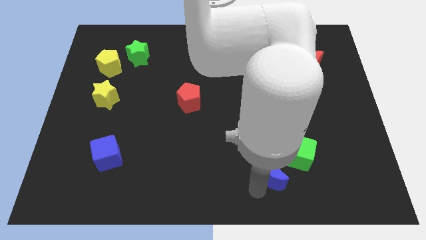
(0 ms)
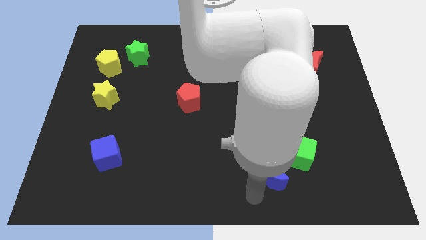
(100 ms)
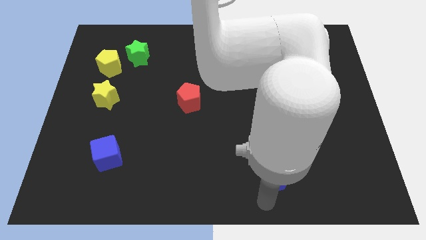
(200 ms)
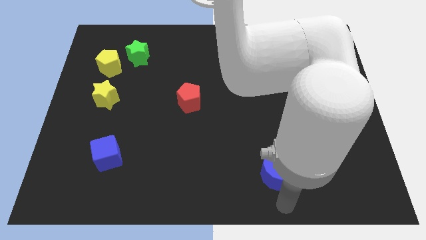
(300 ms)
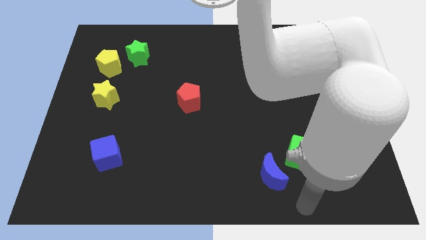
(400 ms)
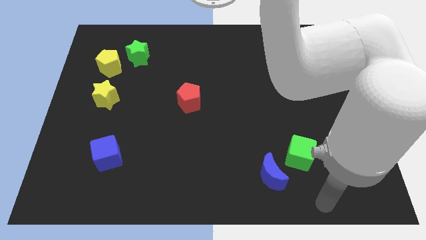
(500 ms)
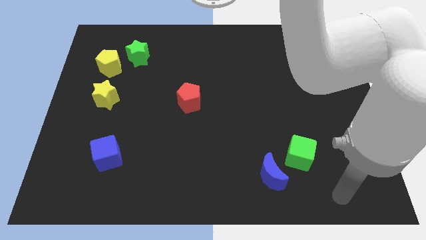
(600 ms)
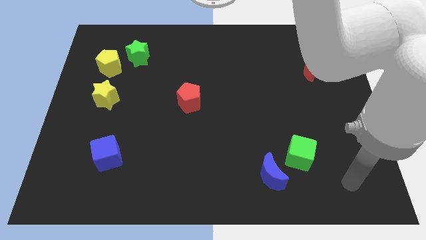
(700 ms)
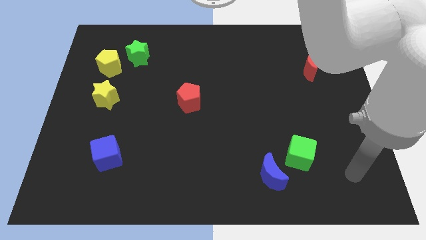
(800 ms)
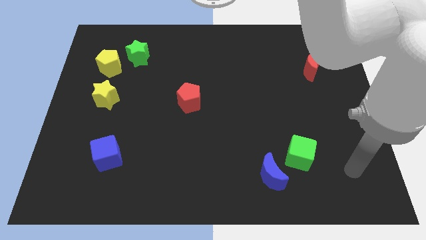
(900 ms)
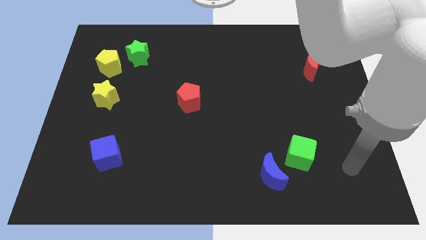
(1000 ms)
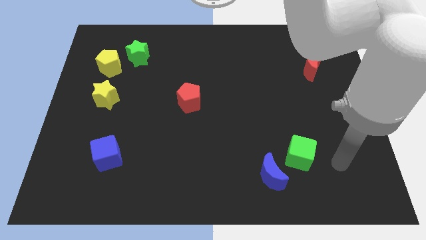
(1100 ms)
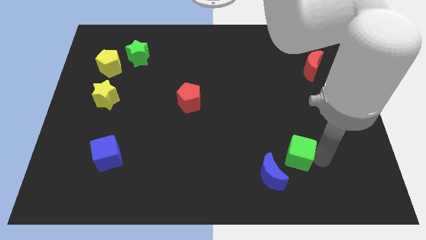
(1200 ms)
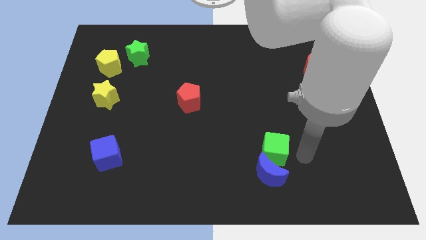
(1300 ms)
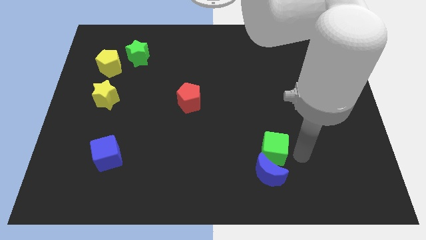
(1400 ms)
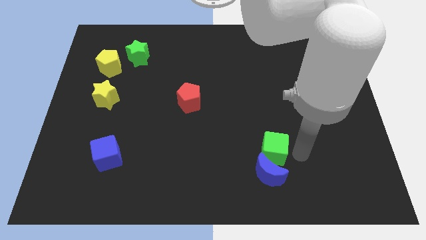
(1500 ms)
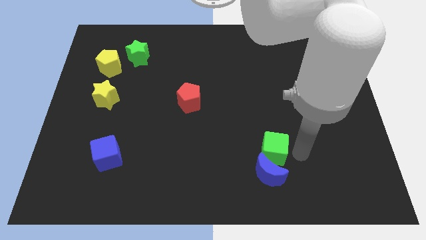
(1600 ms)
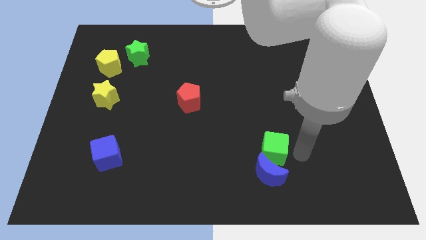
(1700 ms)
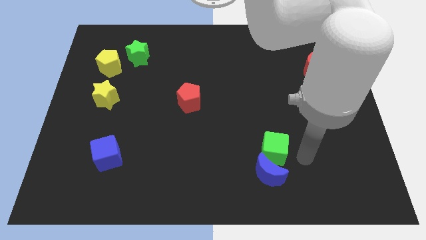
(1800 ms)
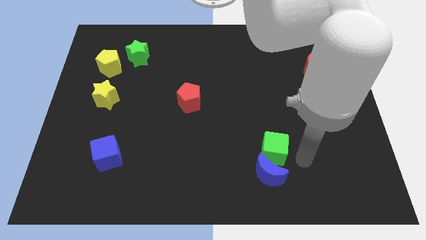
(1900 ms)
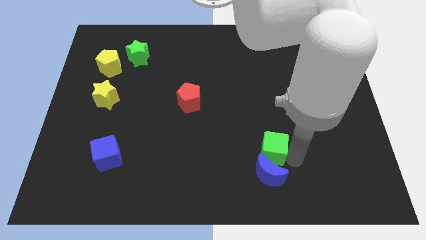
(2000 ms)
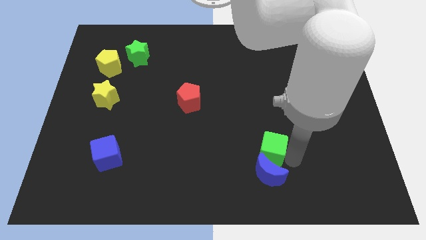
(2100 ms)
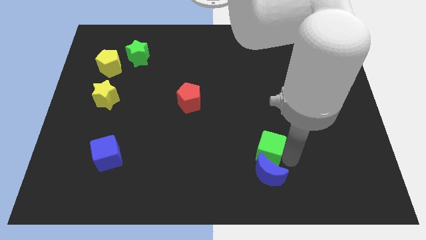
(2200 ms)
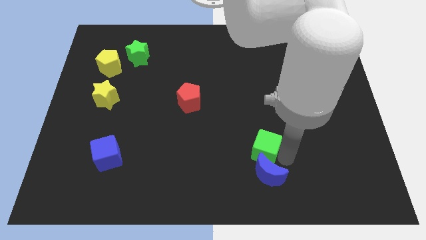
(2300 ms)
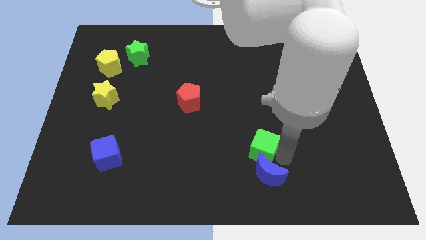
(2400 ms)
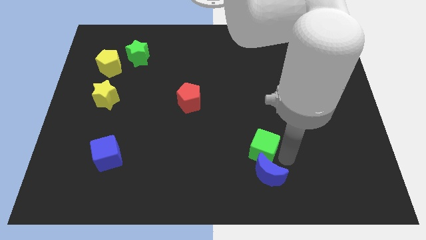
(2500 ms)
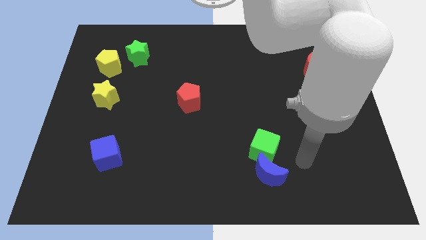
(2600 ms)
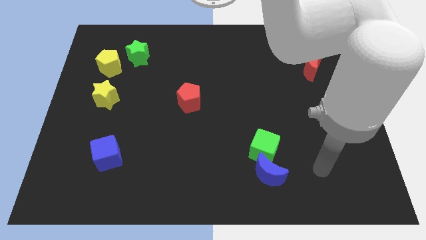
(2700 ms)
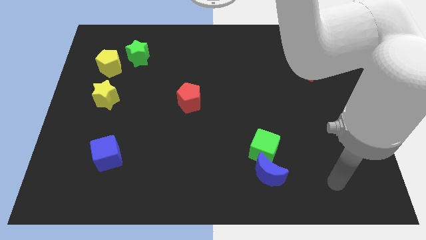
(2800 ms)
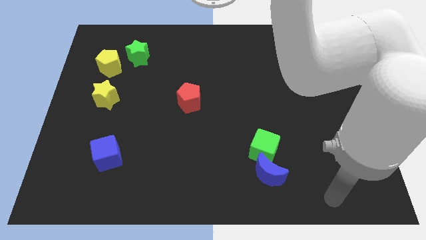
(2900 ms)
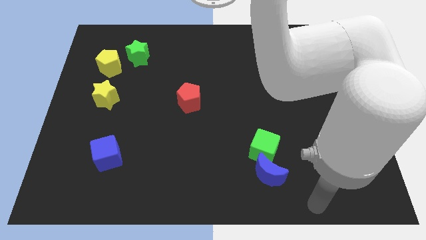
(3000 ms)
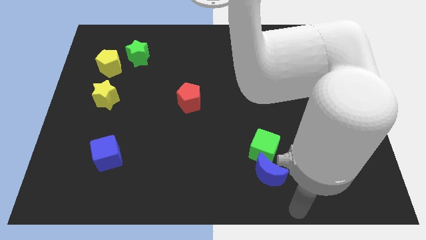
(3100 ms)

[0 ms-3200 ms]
put the green cube diagonally top left to the blue moon

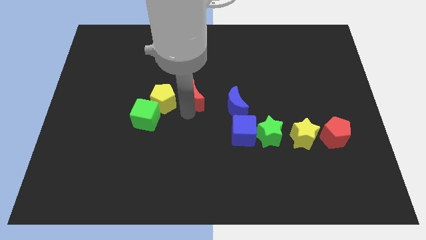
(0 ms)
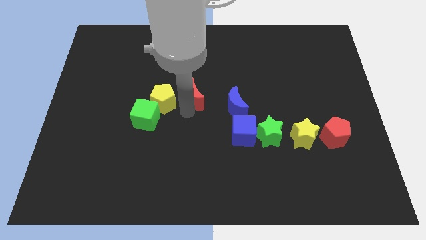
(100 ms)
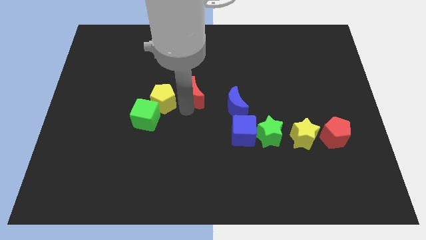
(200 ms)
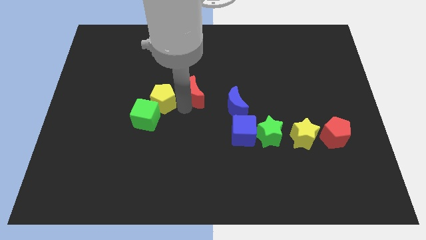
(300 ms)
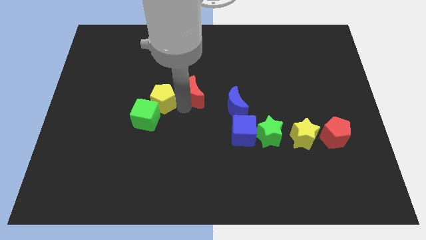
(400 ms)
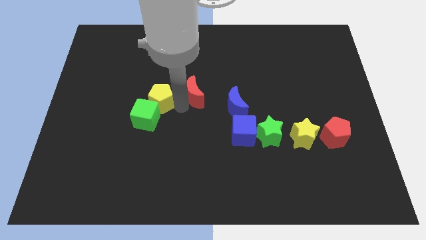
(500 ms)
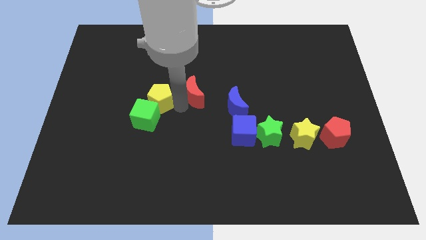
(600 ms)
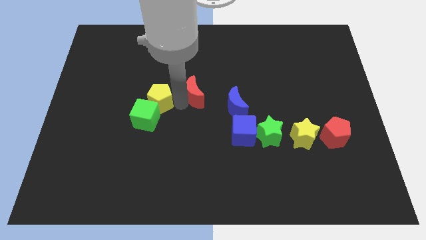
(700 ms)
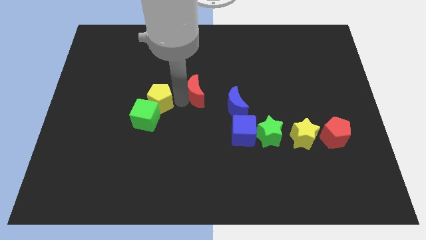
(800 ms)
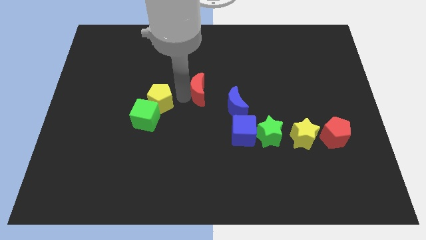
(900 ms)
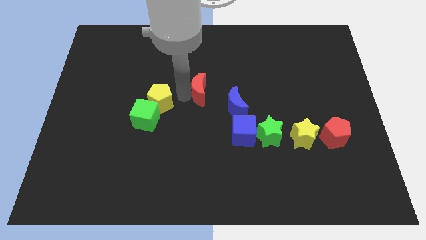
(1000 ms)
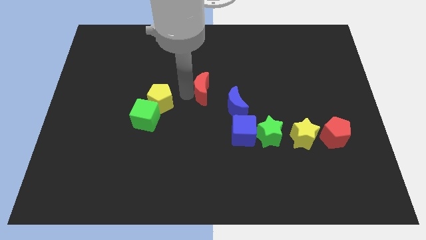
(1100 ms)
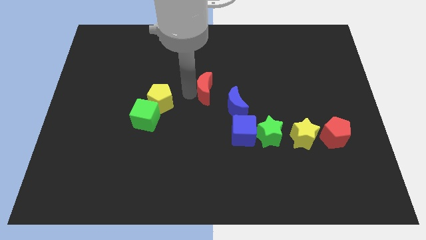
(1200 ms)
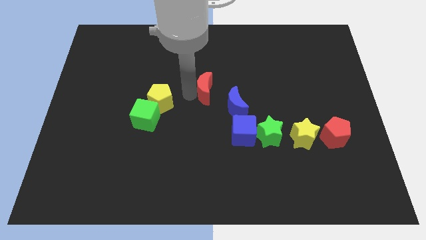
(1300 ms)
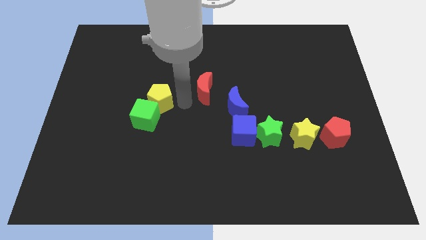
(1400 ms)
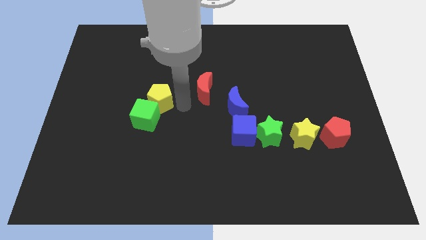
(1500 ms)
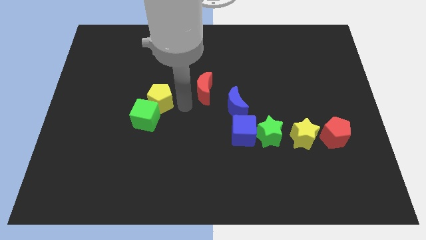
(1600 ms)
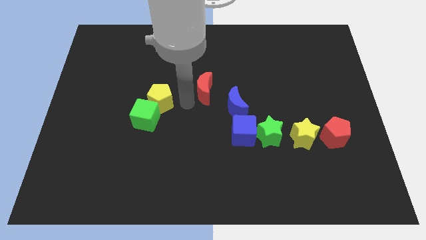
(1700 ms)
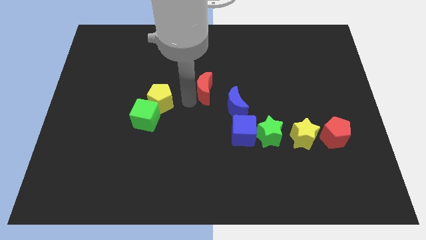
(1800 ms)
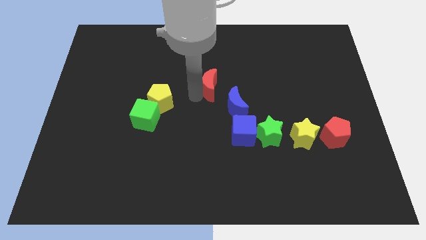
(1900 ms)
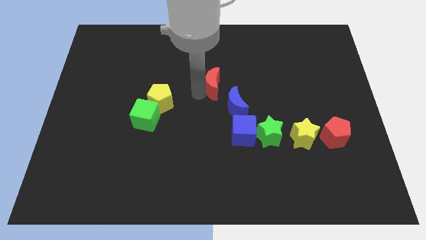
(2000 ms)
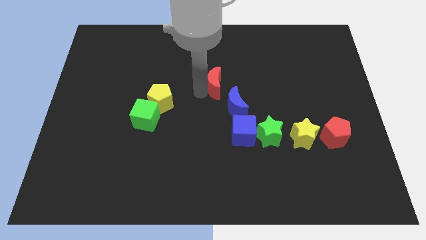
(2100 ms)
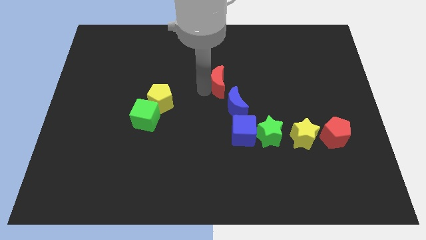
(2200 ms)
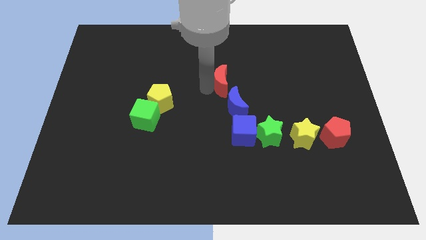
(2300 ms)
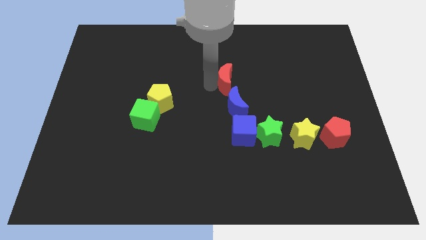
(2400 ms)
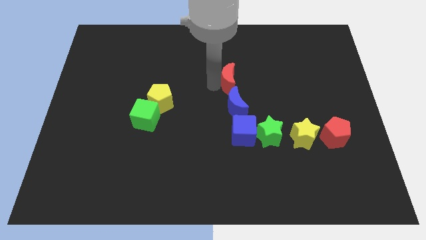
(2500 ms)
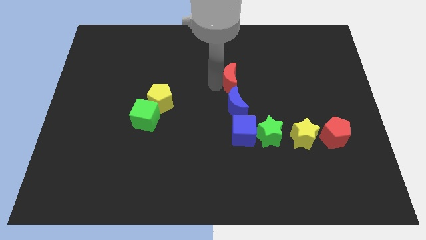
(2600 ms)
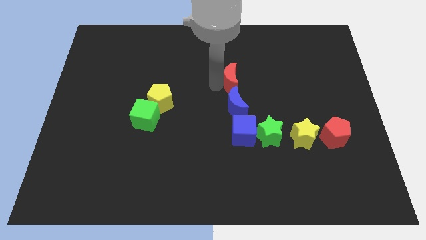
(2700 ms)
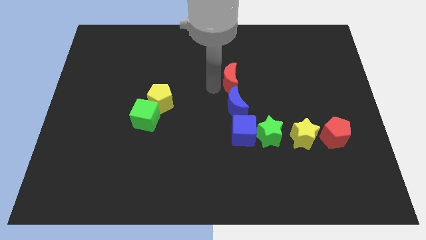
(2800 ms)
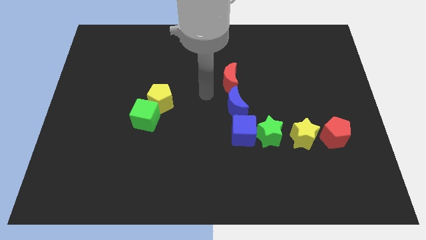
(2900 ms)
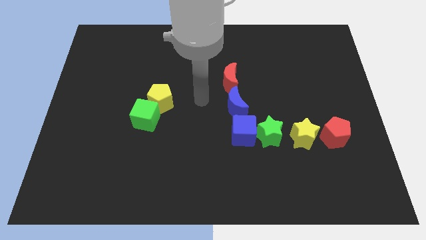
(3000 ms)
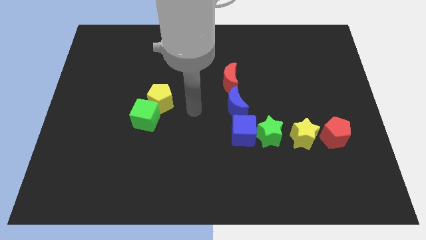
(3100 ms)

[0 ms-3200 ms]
place the red crescent to the top of the blue crescent

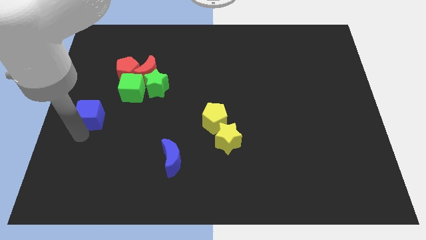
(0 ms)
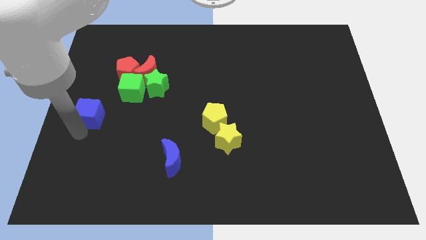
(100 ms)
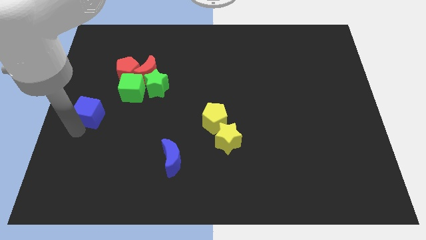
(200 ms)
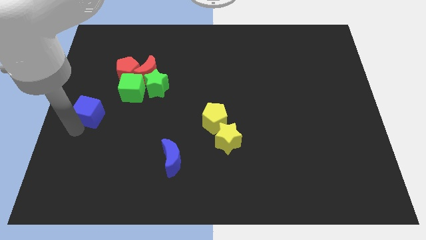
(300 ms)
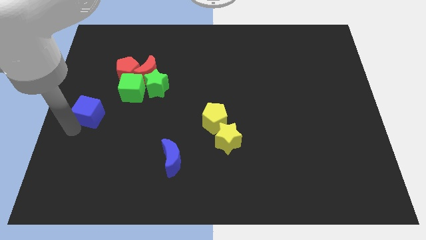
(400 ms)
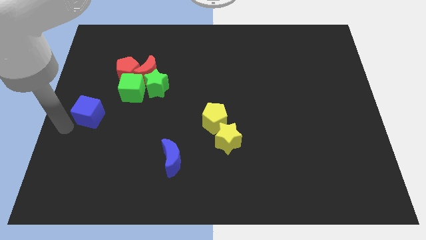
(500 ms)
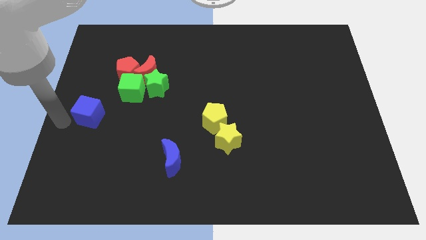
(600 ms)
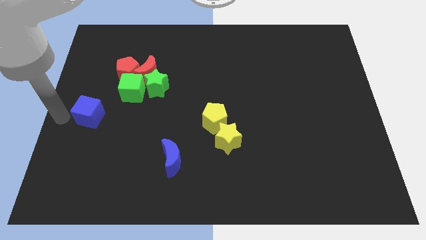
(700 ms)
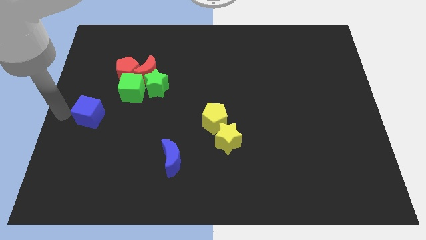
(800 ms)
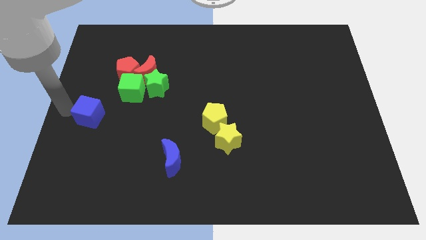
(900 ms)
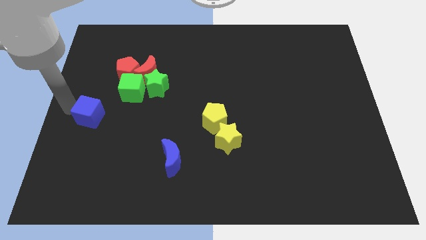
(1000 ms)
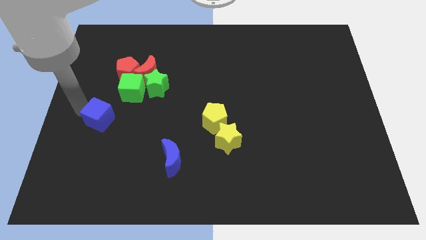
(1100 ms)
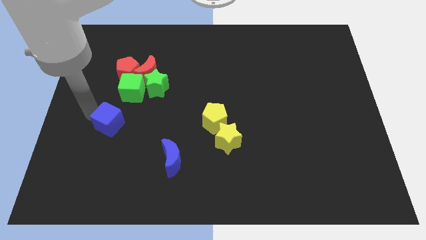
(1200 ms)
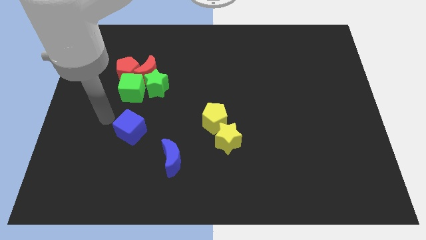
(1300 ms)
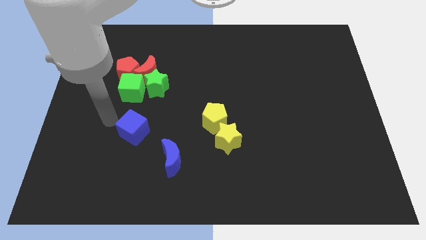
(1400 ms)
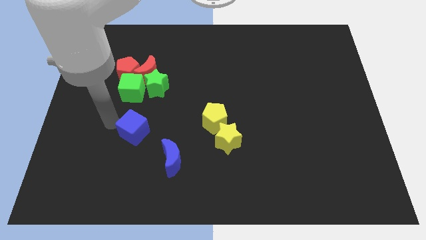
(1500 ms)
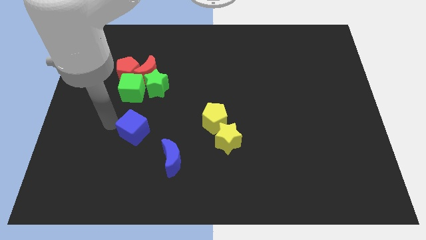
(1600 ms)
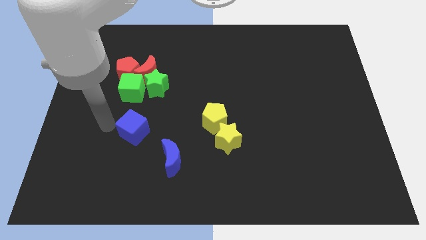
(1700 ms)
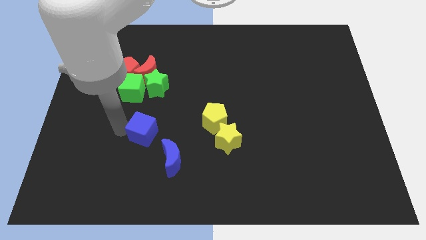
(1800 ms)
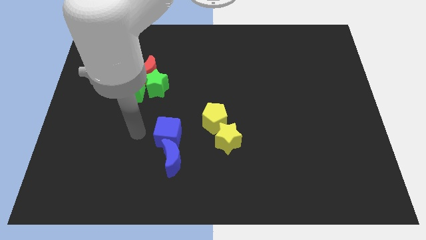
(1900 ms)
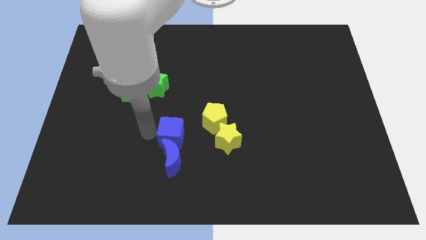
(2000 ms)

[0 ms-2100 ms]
put the blue cube above the blue moon

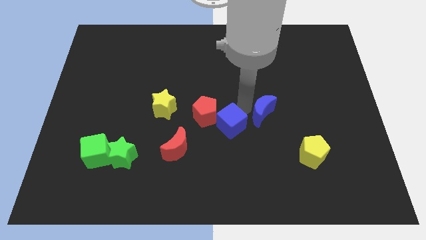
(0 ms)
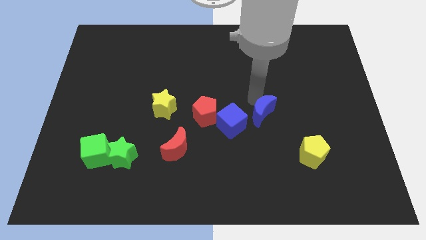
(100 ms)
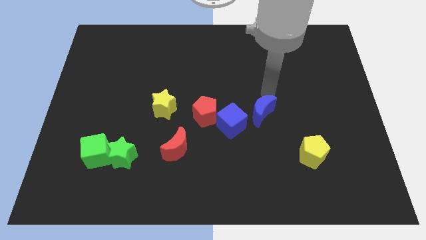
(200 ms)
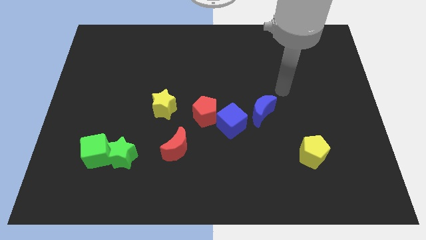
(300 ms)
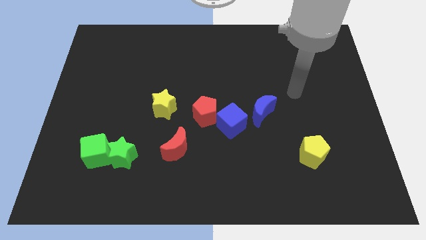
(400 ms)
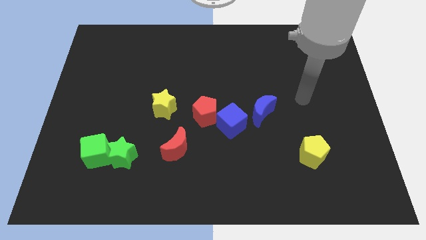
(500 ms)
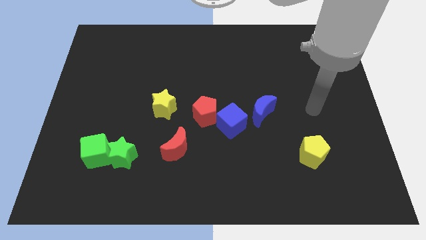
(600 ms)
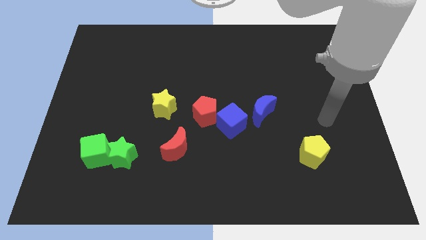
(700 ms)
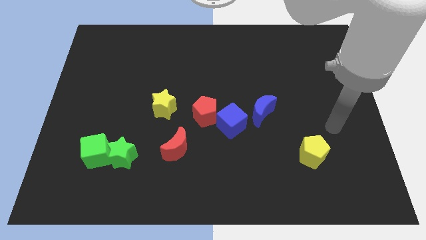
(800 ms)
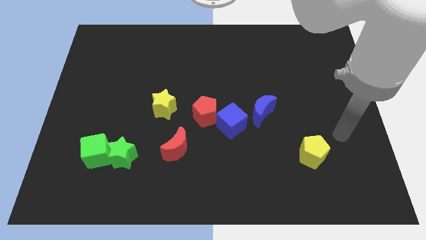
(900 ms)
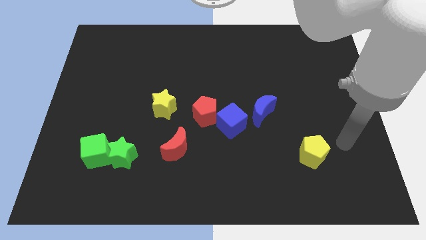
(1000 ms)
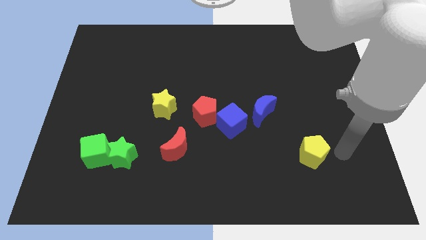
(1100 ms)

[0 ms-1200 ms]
move your arm away from the blue cube
